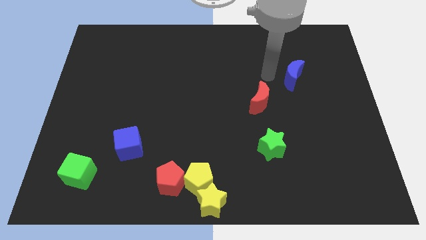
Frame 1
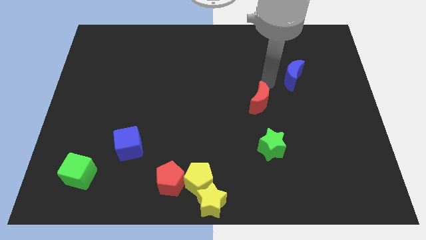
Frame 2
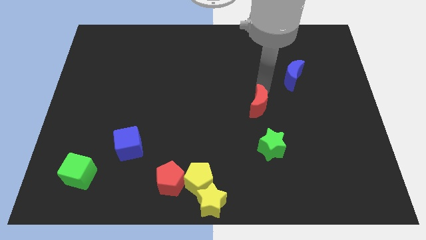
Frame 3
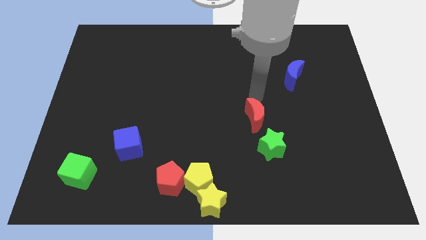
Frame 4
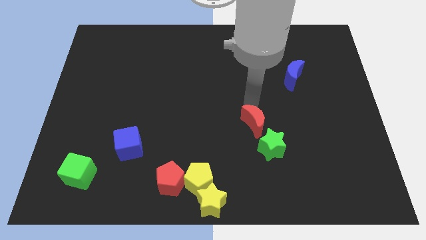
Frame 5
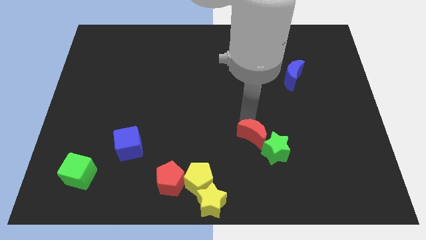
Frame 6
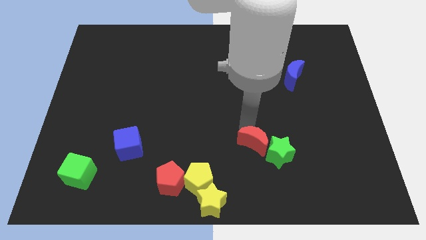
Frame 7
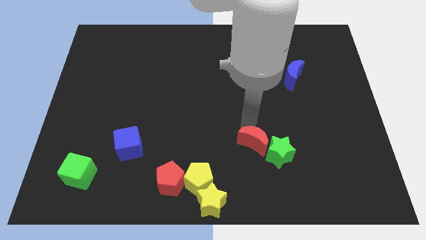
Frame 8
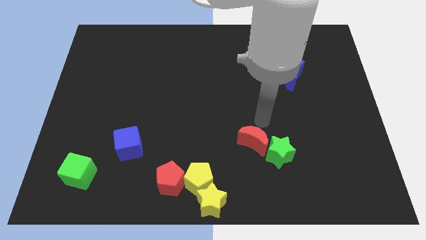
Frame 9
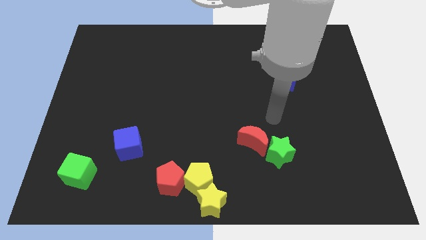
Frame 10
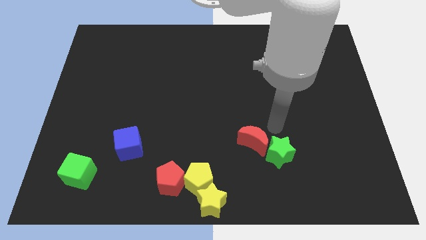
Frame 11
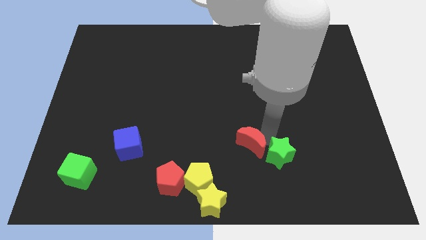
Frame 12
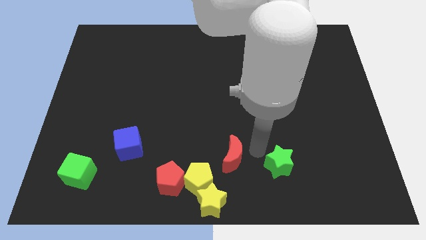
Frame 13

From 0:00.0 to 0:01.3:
touch green star with red crescent

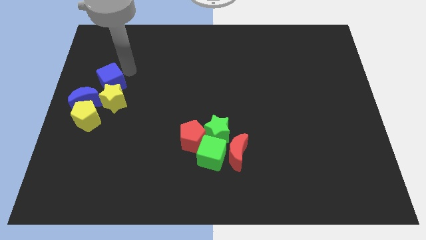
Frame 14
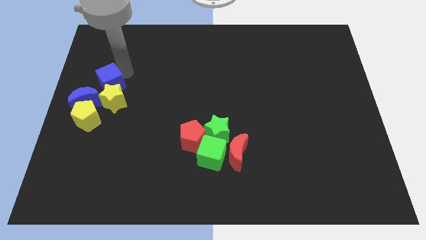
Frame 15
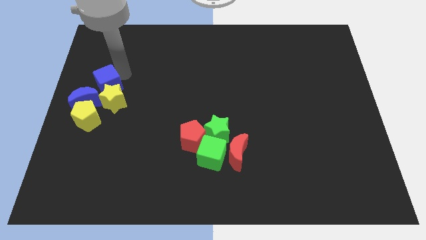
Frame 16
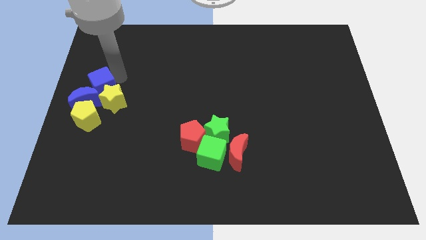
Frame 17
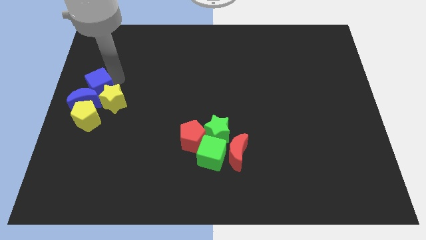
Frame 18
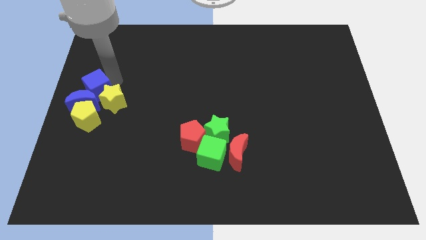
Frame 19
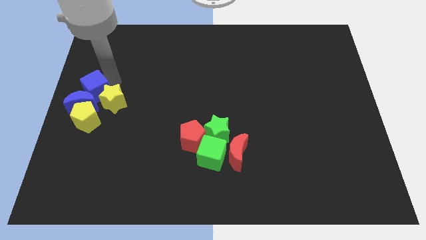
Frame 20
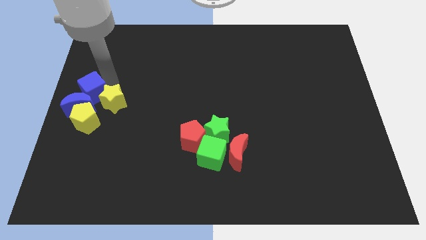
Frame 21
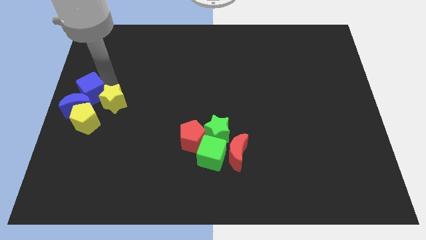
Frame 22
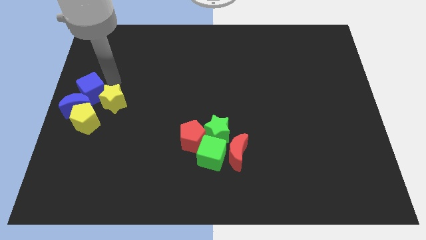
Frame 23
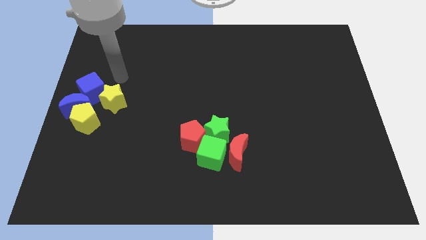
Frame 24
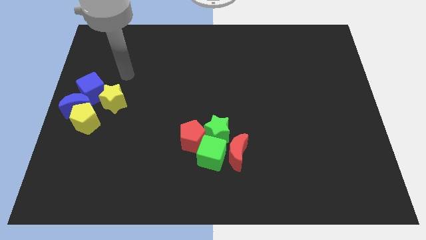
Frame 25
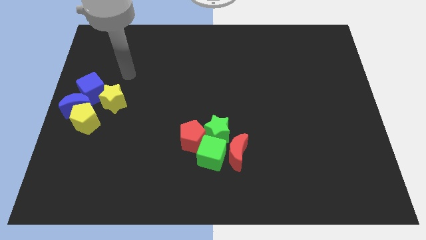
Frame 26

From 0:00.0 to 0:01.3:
move the blue cube to the top left of the yellow star

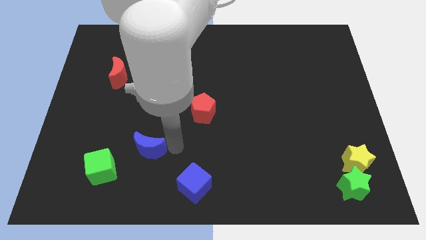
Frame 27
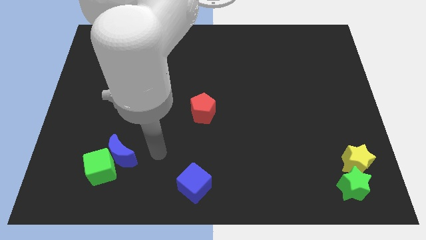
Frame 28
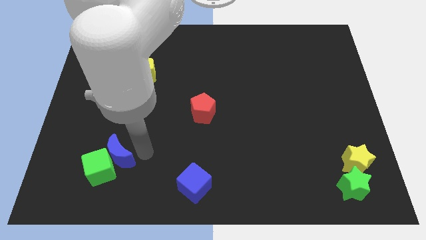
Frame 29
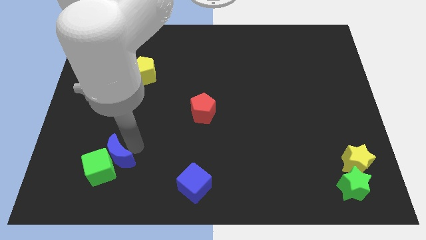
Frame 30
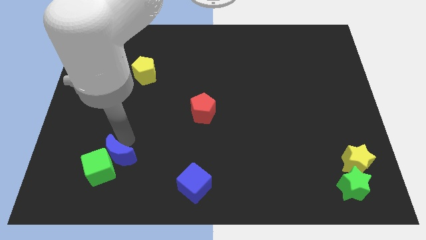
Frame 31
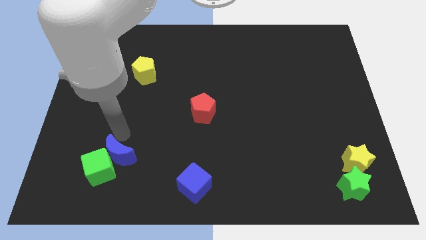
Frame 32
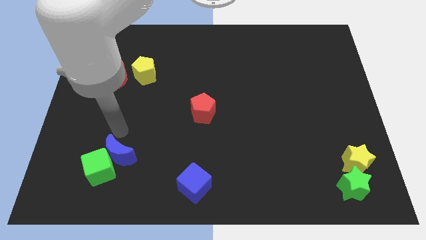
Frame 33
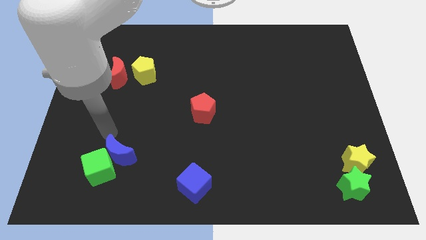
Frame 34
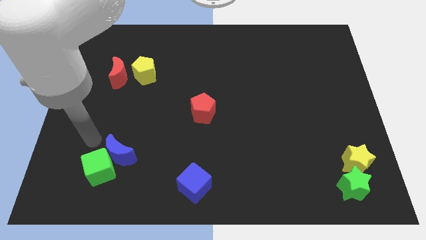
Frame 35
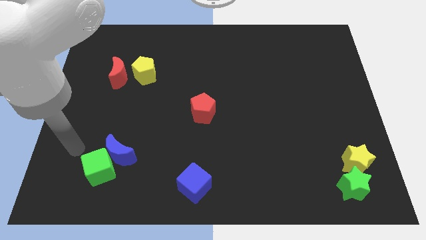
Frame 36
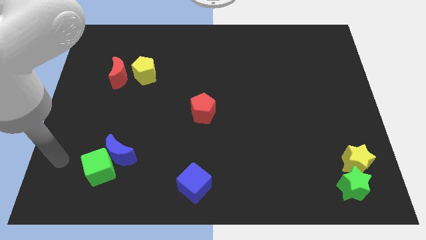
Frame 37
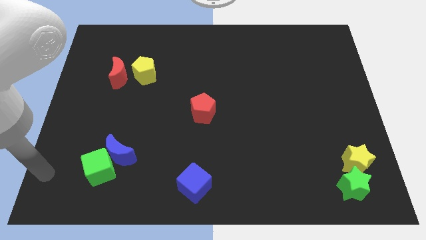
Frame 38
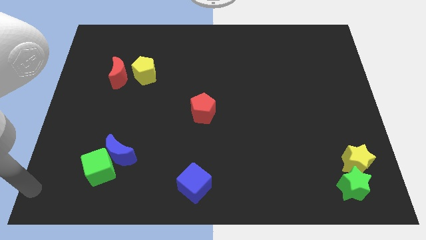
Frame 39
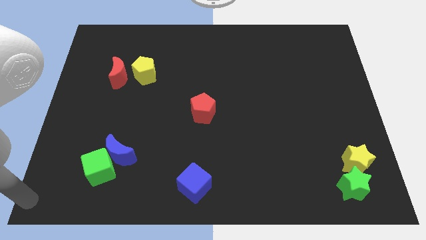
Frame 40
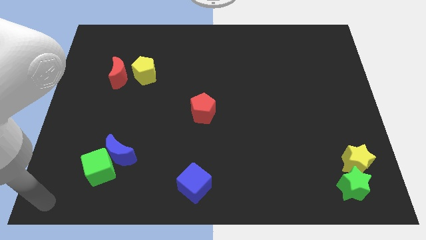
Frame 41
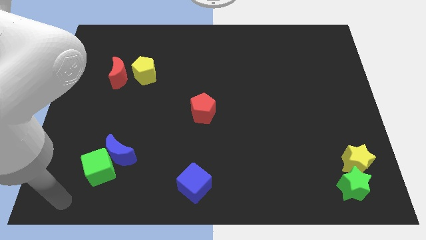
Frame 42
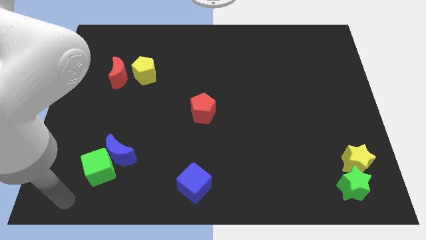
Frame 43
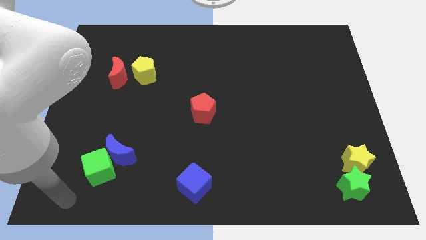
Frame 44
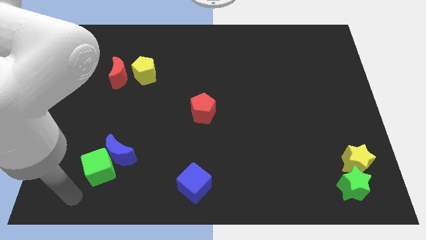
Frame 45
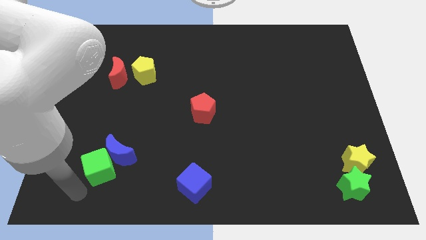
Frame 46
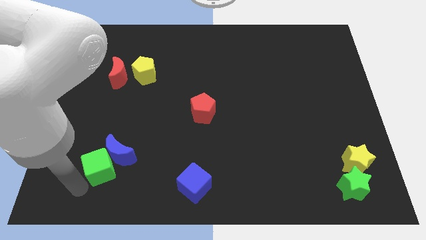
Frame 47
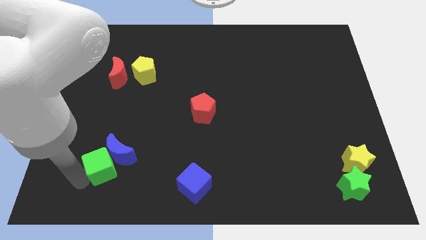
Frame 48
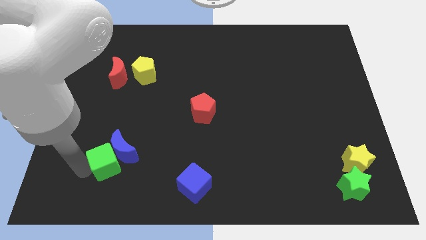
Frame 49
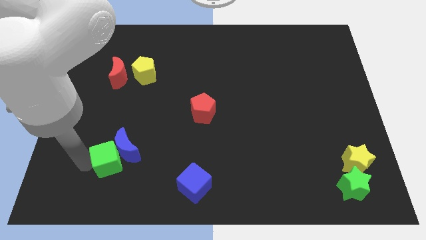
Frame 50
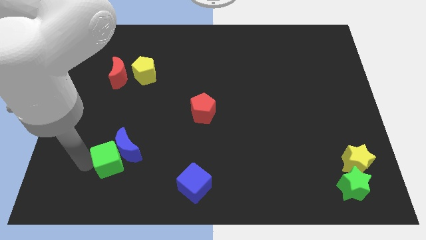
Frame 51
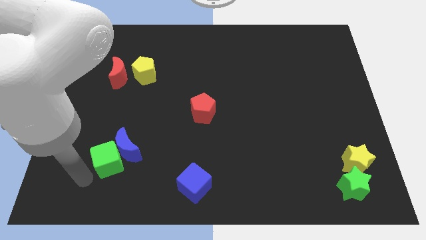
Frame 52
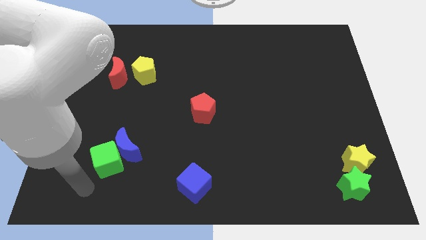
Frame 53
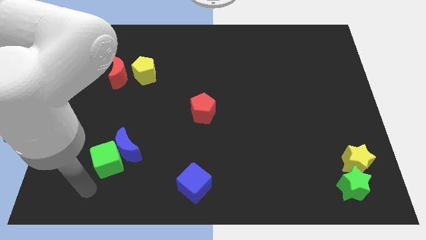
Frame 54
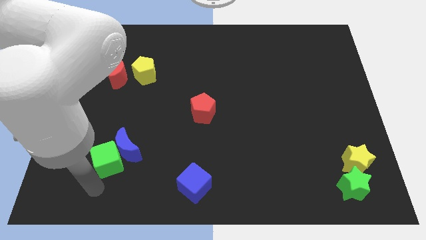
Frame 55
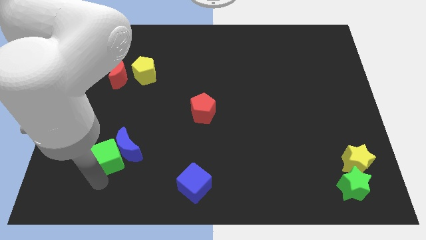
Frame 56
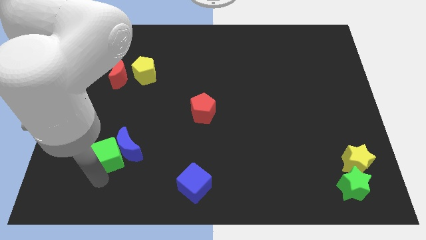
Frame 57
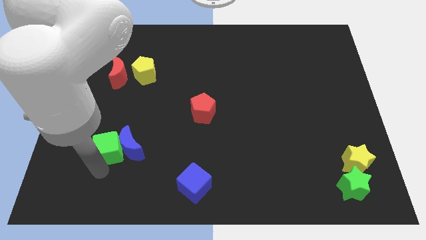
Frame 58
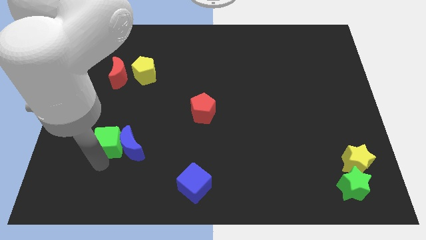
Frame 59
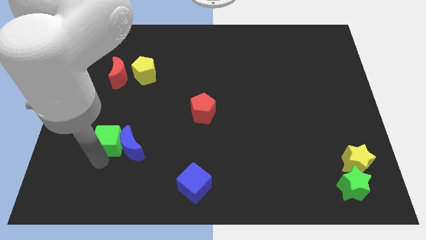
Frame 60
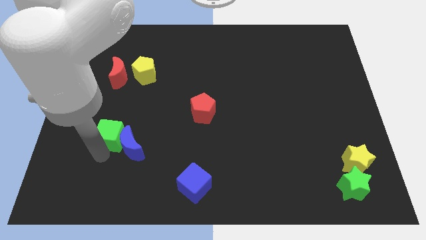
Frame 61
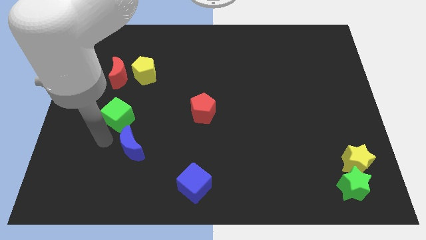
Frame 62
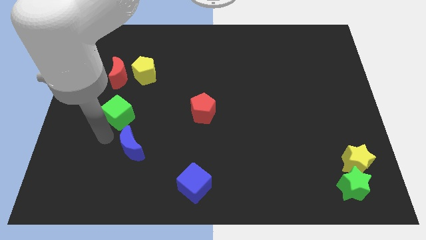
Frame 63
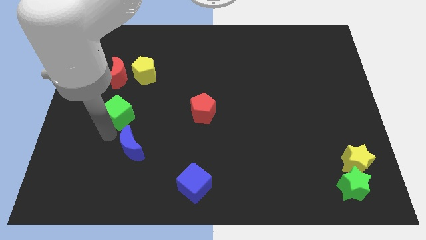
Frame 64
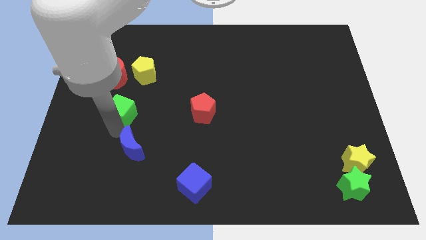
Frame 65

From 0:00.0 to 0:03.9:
move the green cube towards top of the blue crescent

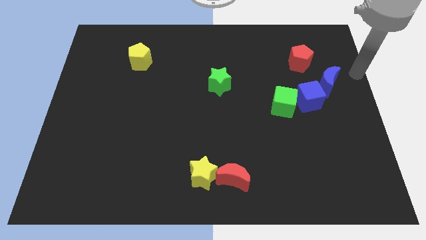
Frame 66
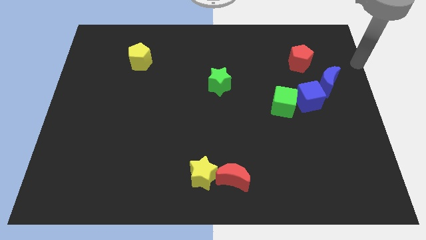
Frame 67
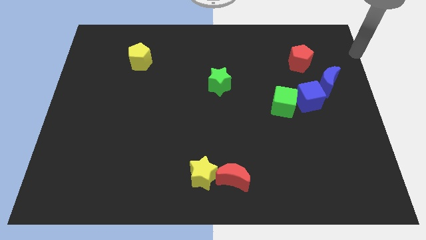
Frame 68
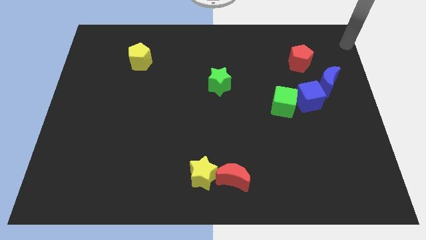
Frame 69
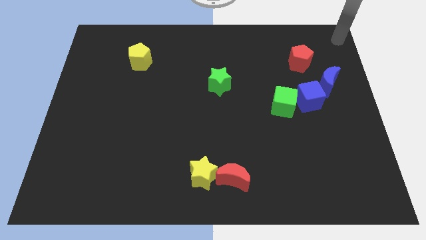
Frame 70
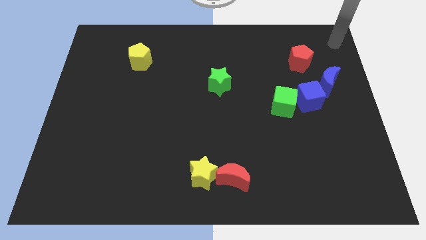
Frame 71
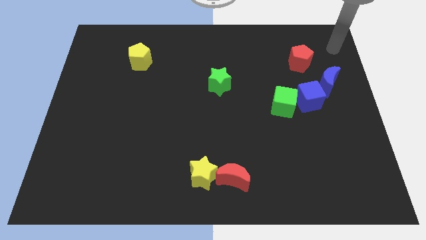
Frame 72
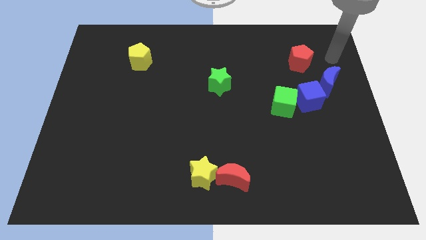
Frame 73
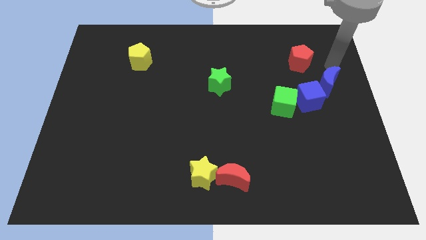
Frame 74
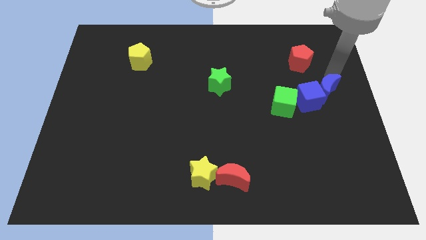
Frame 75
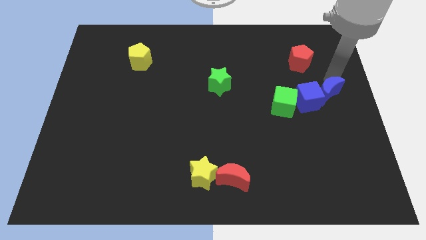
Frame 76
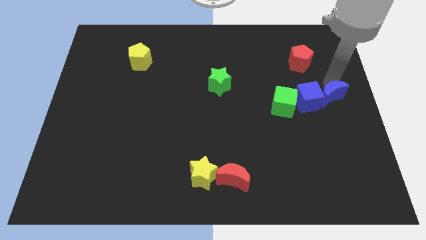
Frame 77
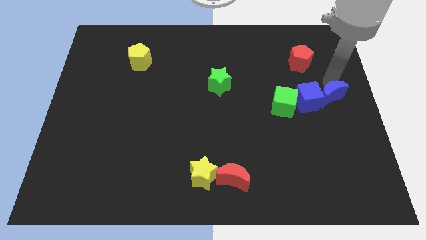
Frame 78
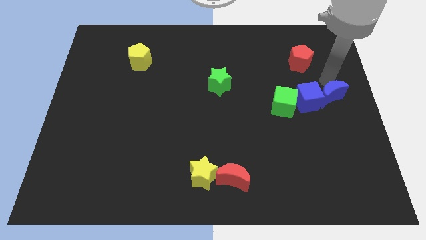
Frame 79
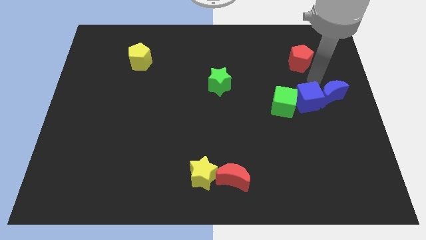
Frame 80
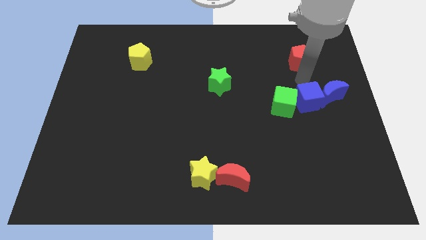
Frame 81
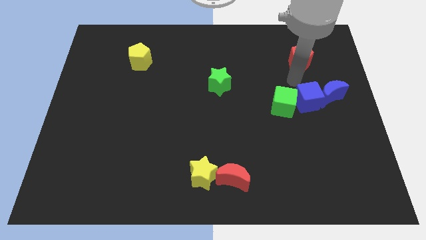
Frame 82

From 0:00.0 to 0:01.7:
put the blue moon into the blue cube

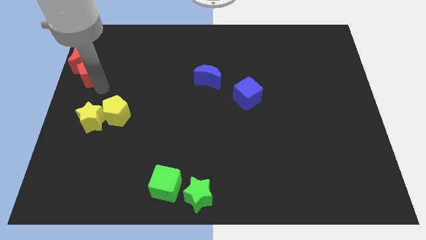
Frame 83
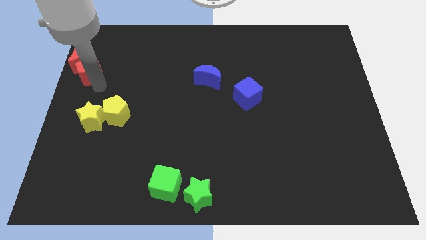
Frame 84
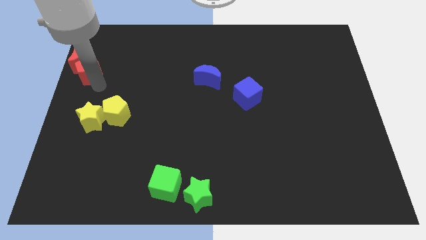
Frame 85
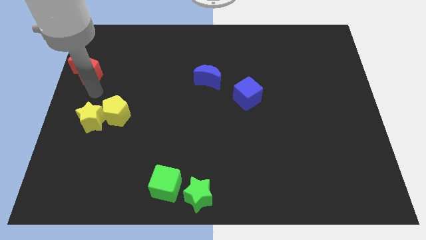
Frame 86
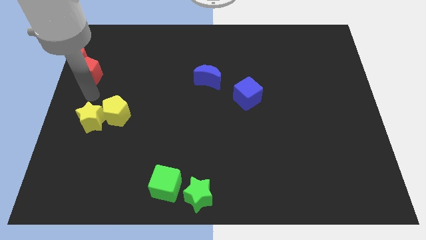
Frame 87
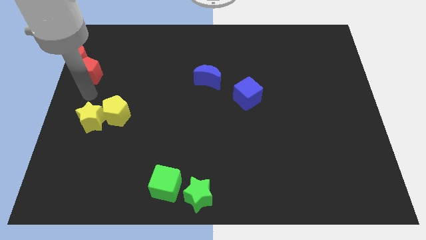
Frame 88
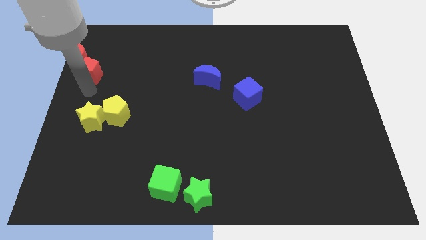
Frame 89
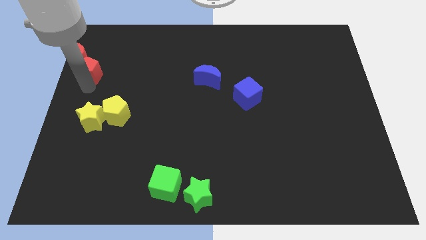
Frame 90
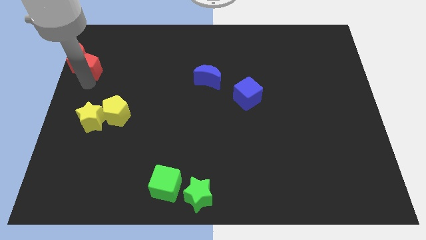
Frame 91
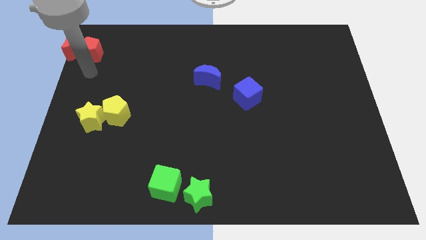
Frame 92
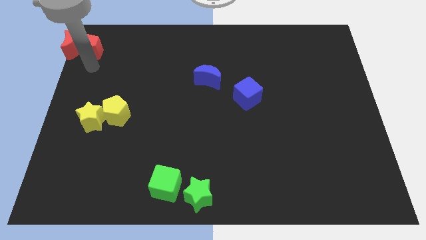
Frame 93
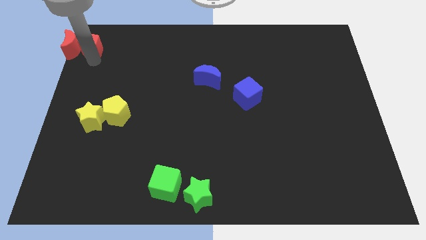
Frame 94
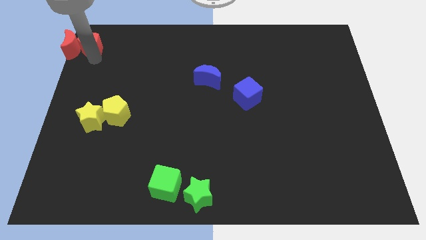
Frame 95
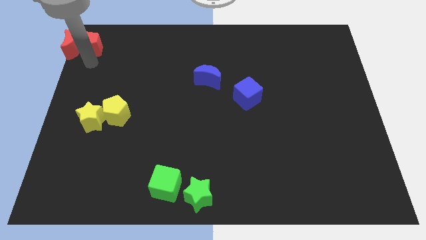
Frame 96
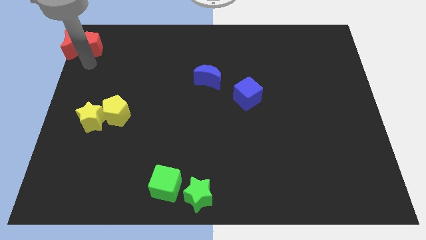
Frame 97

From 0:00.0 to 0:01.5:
place the red pentagon to the right of red moon
